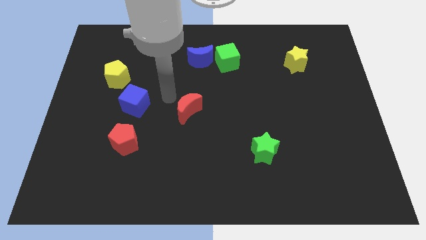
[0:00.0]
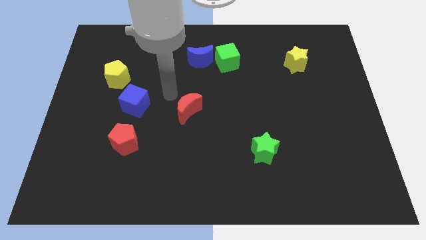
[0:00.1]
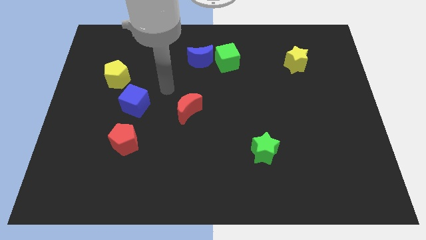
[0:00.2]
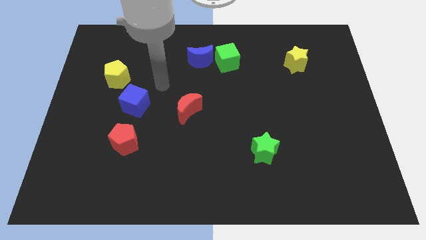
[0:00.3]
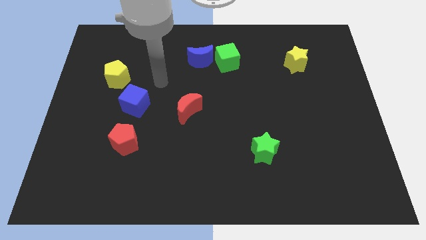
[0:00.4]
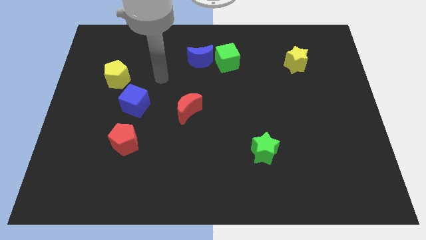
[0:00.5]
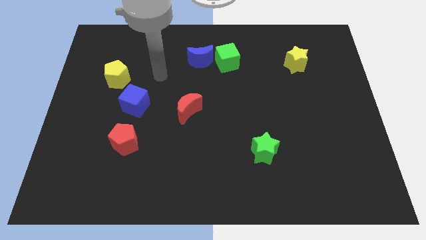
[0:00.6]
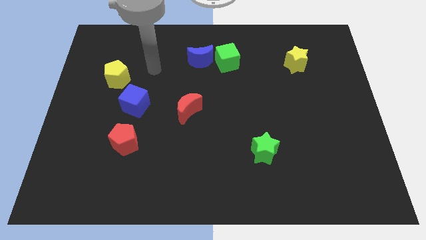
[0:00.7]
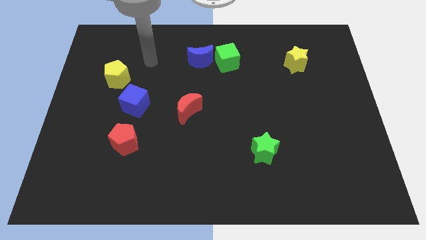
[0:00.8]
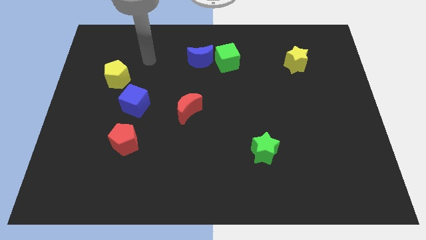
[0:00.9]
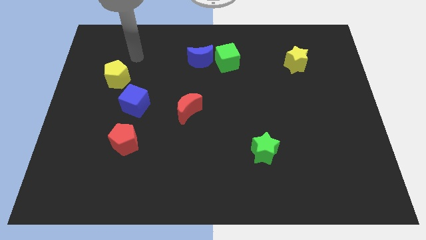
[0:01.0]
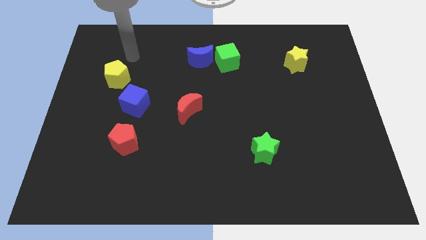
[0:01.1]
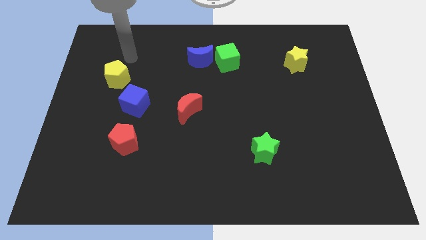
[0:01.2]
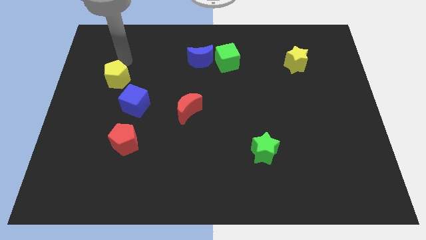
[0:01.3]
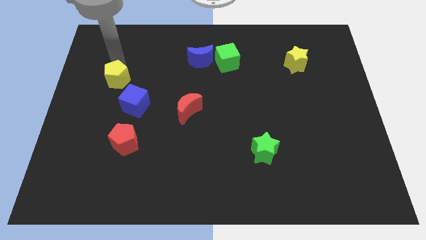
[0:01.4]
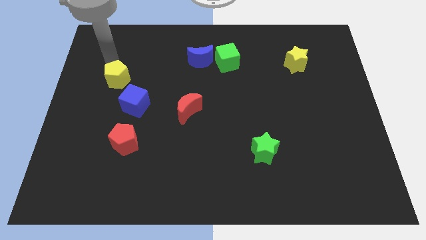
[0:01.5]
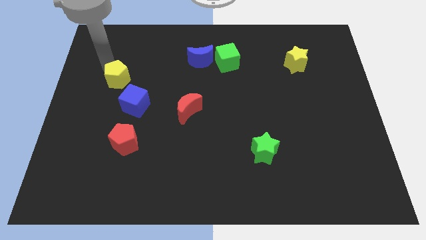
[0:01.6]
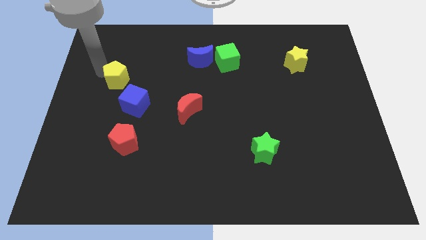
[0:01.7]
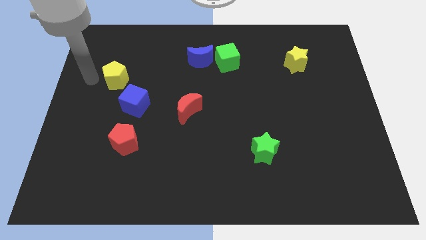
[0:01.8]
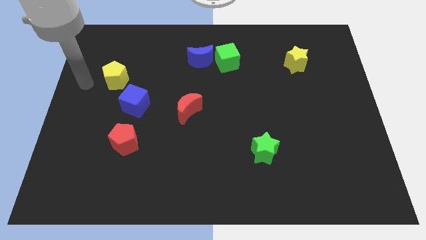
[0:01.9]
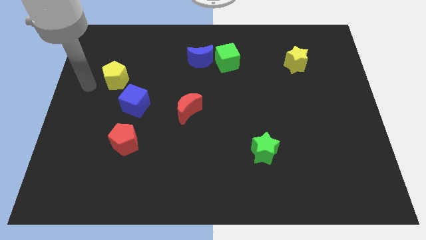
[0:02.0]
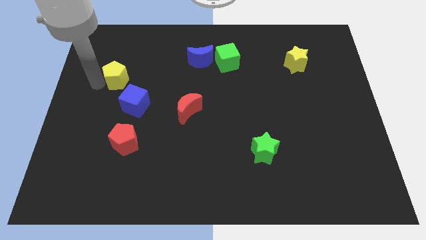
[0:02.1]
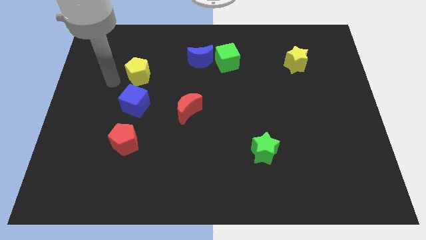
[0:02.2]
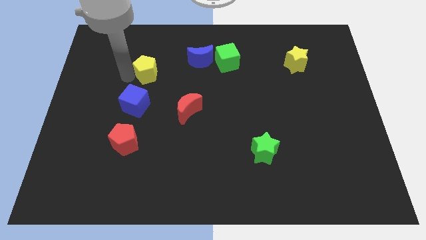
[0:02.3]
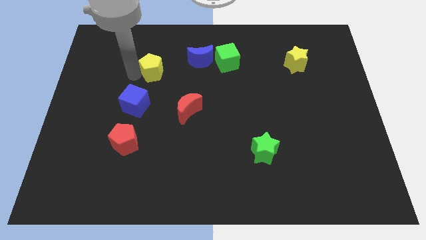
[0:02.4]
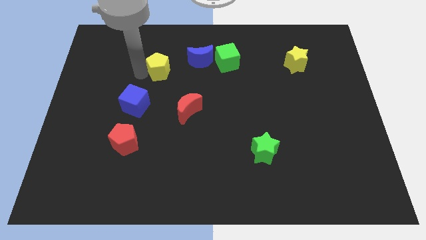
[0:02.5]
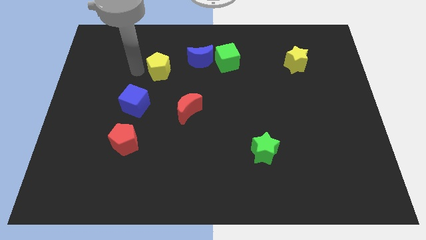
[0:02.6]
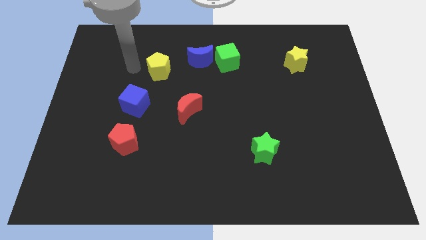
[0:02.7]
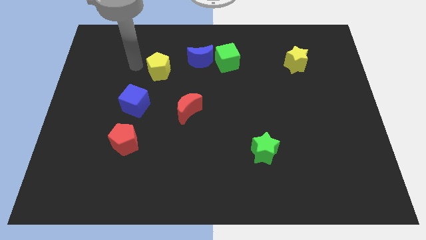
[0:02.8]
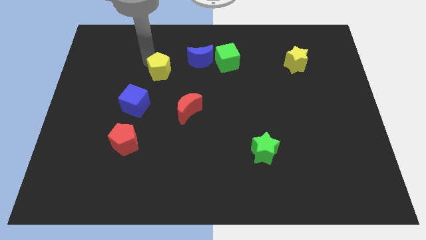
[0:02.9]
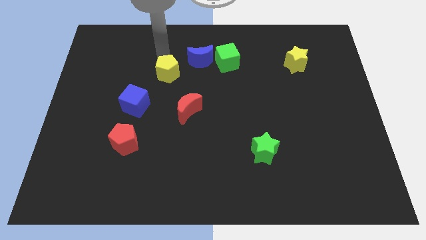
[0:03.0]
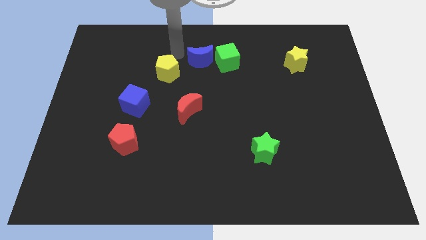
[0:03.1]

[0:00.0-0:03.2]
place the yellow pentagon diagonal to the blue cube

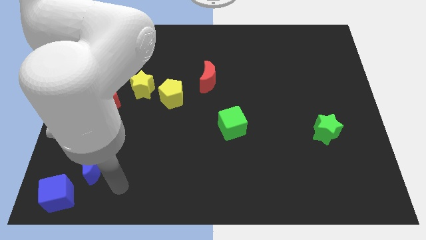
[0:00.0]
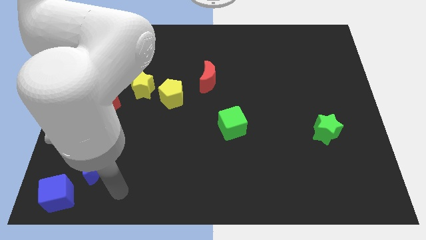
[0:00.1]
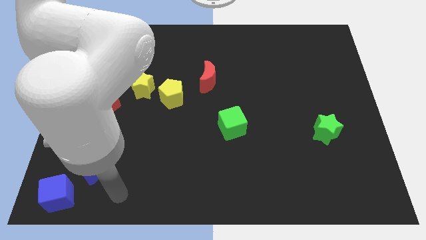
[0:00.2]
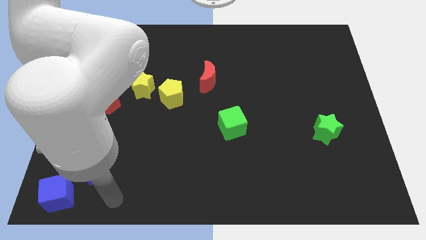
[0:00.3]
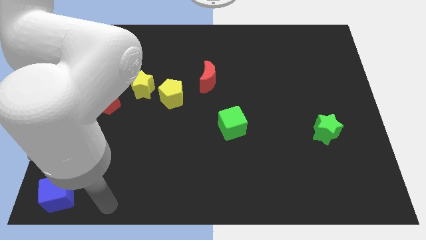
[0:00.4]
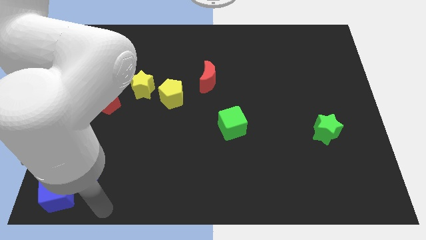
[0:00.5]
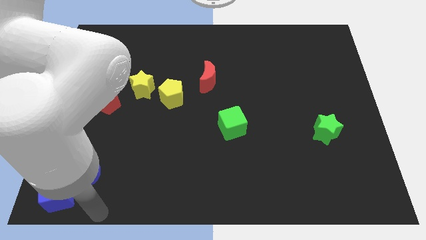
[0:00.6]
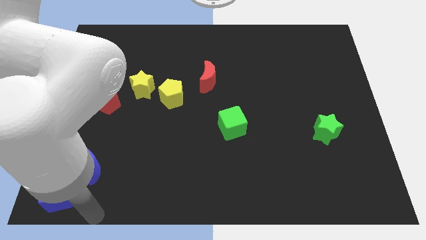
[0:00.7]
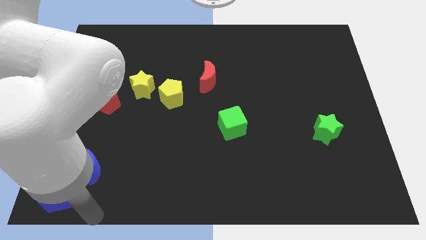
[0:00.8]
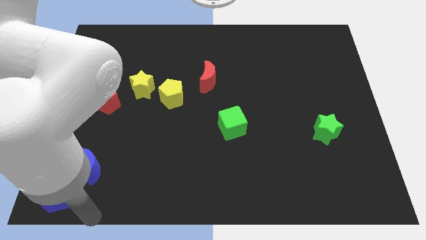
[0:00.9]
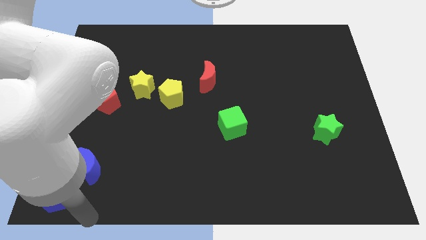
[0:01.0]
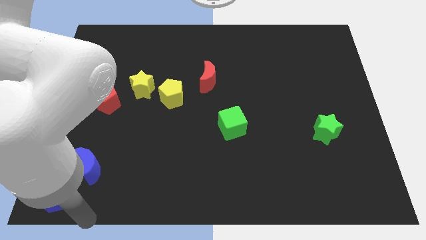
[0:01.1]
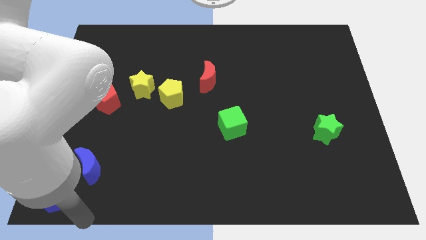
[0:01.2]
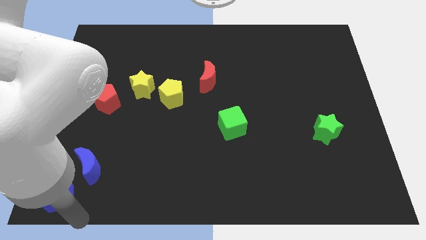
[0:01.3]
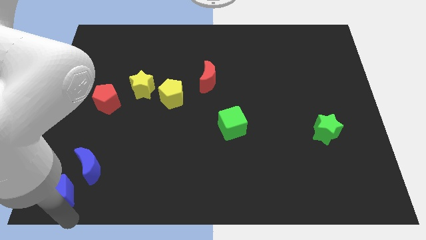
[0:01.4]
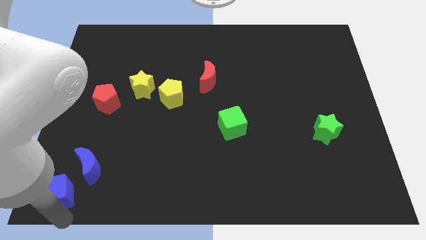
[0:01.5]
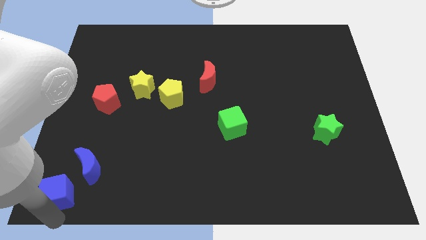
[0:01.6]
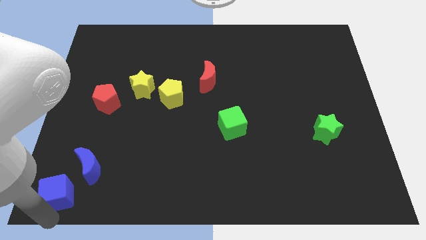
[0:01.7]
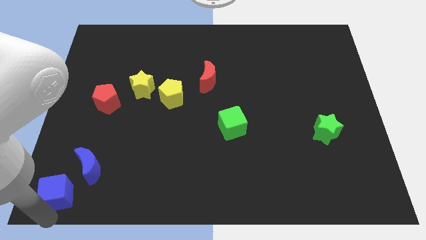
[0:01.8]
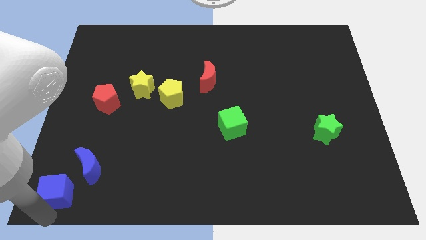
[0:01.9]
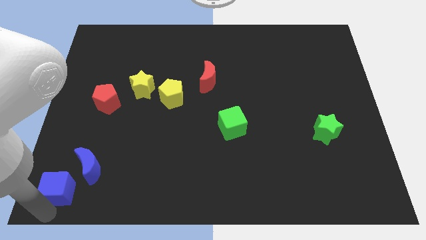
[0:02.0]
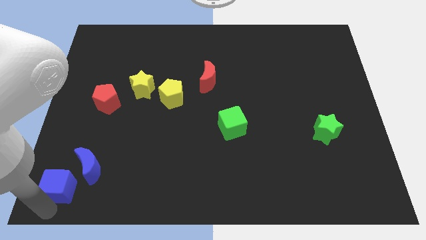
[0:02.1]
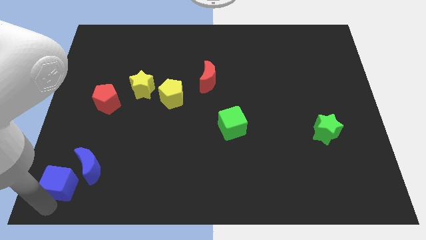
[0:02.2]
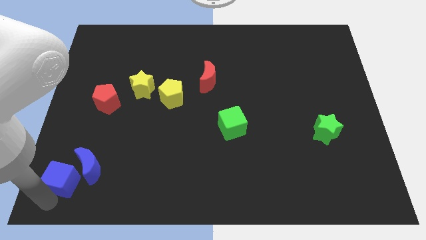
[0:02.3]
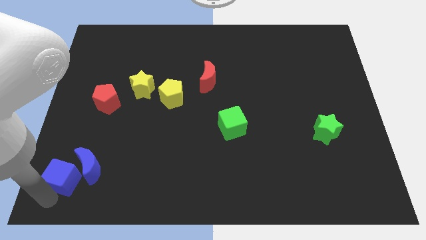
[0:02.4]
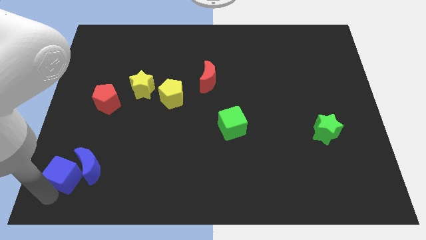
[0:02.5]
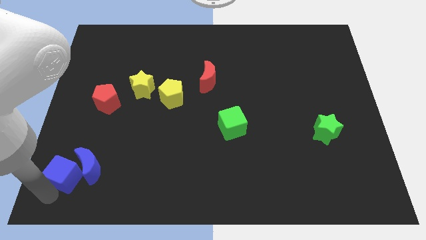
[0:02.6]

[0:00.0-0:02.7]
move the blue crescent left towards the blue cube

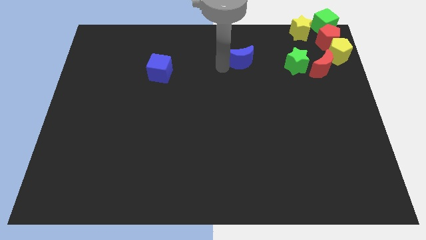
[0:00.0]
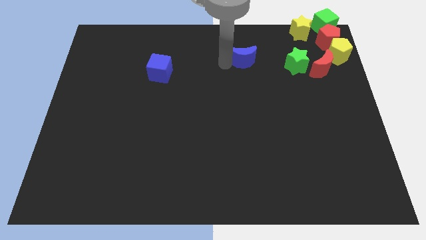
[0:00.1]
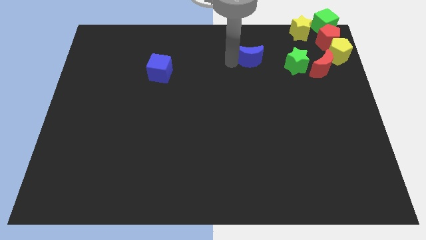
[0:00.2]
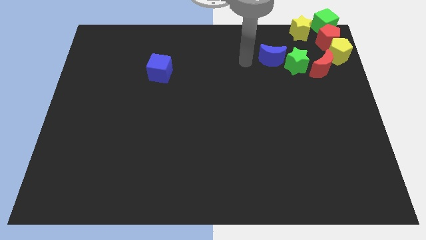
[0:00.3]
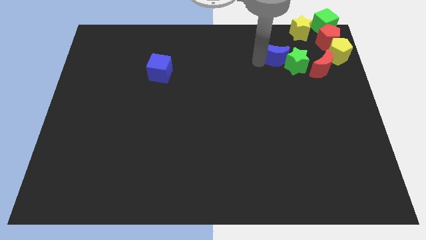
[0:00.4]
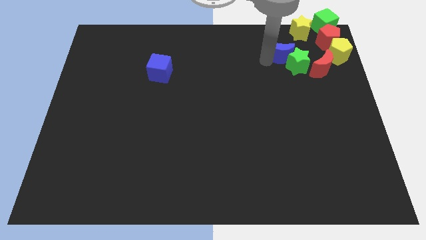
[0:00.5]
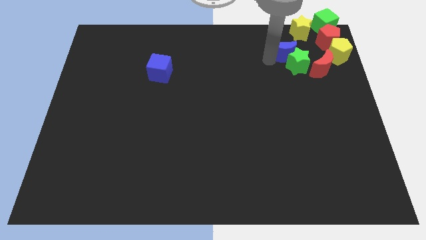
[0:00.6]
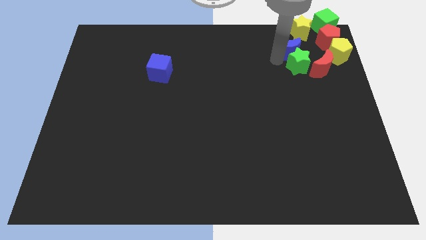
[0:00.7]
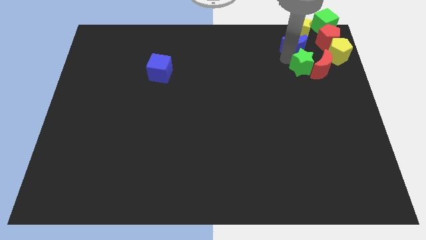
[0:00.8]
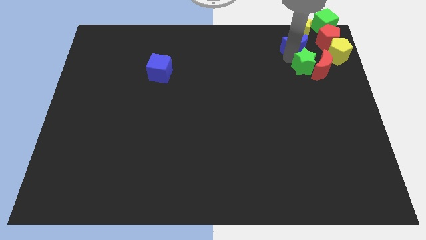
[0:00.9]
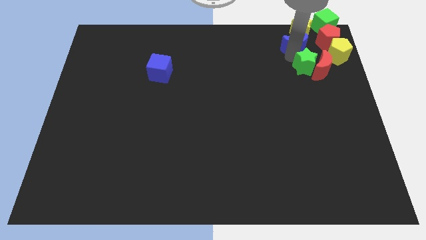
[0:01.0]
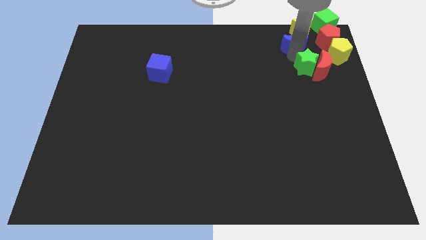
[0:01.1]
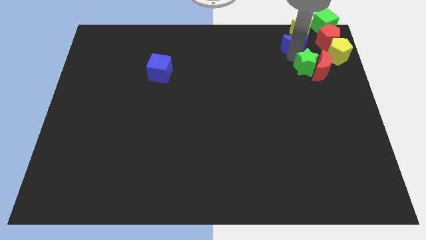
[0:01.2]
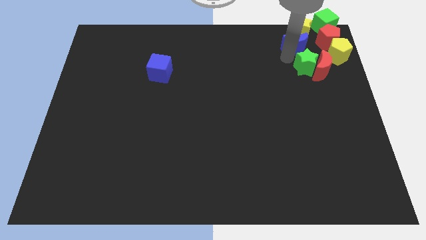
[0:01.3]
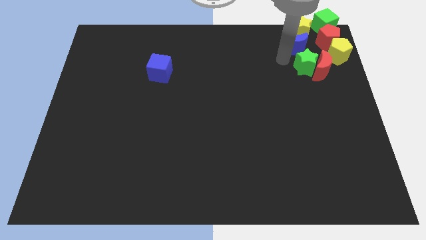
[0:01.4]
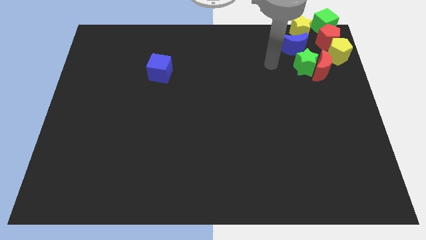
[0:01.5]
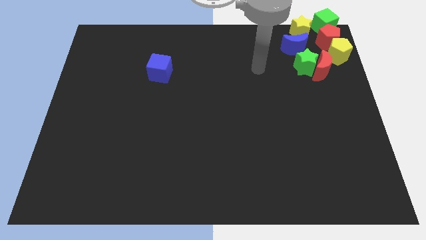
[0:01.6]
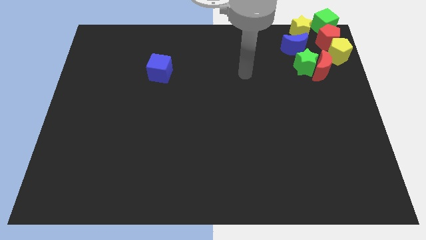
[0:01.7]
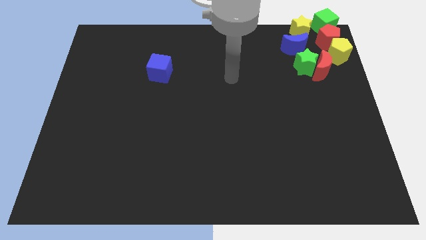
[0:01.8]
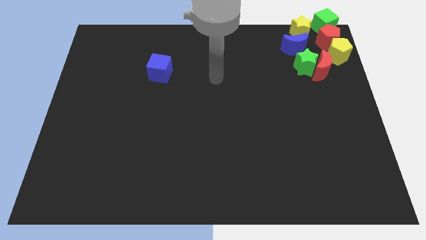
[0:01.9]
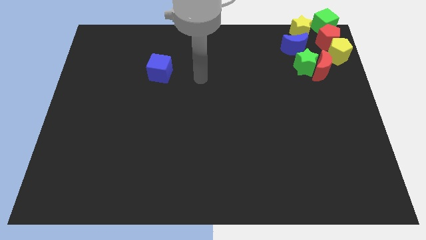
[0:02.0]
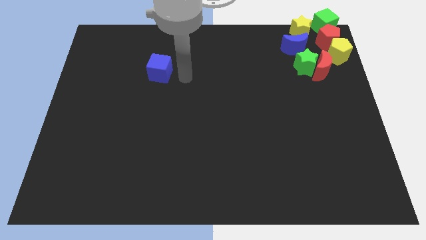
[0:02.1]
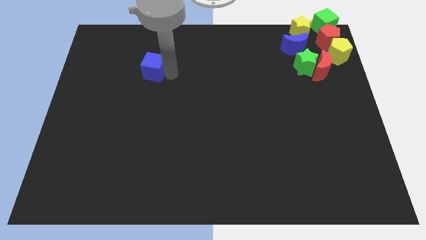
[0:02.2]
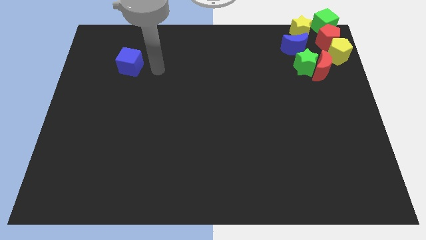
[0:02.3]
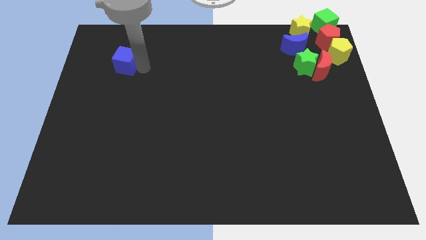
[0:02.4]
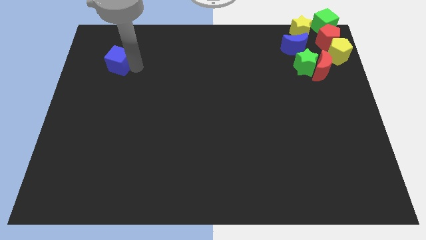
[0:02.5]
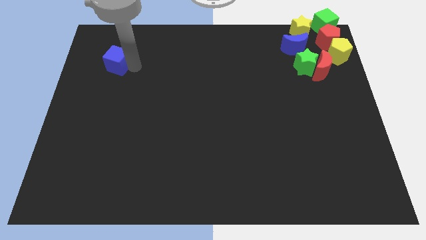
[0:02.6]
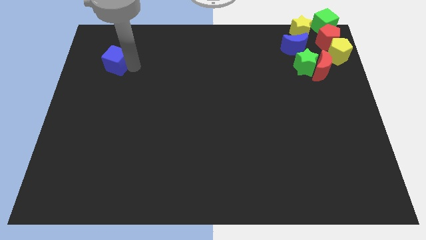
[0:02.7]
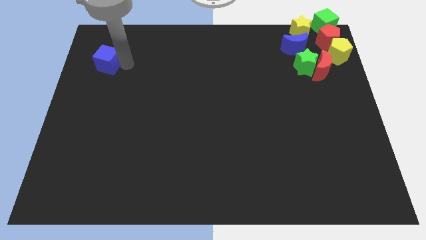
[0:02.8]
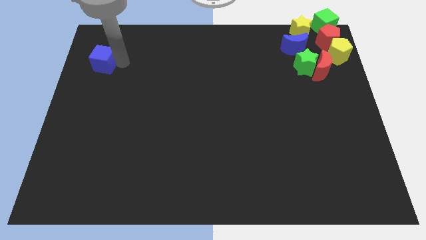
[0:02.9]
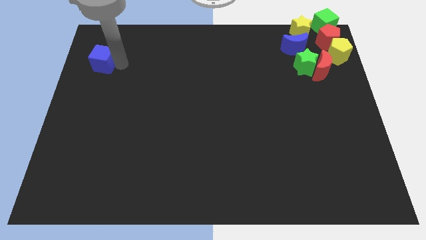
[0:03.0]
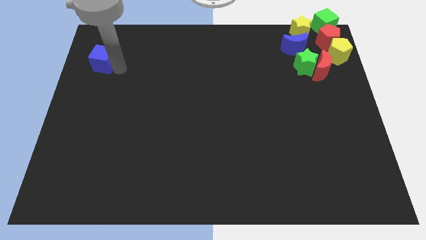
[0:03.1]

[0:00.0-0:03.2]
place blue blocks in a horizontal line
